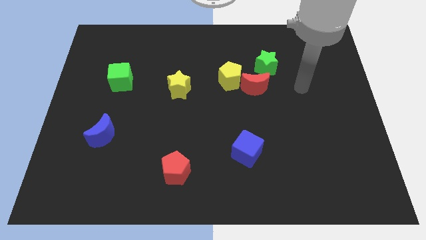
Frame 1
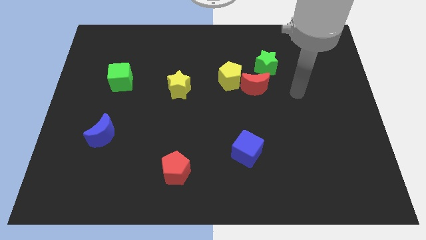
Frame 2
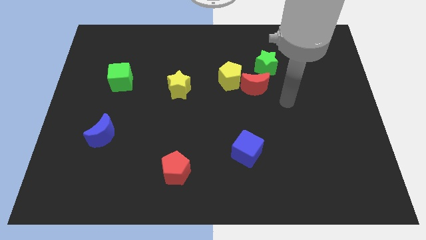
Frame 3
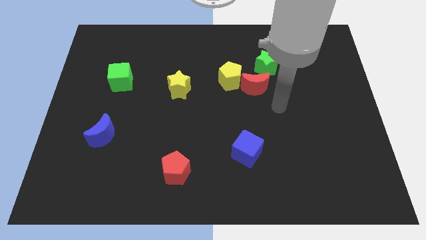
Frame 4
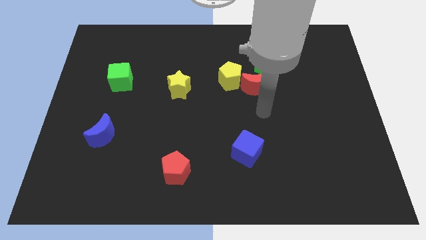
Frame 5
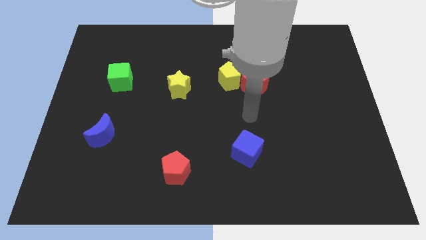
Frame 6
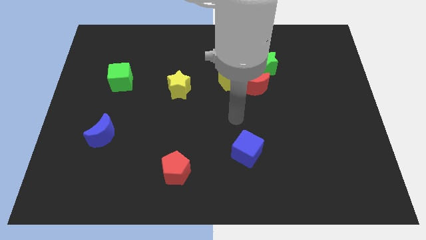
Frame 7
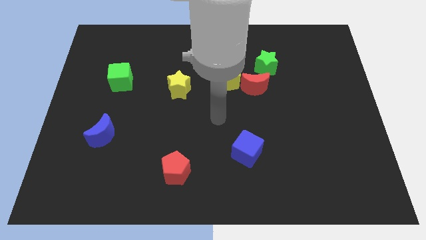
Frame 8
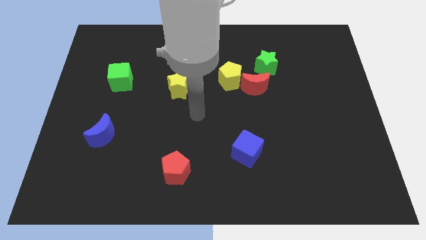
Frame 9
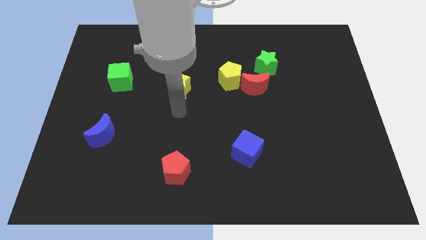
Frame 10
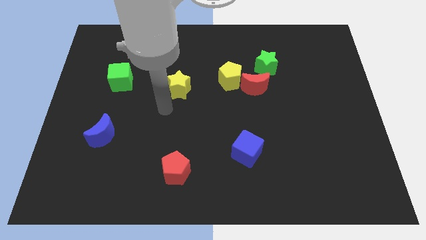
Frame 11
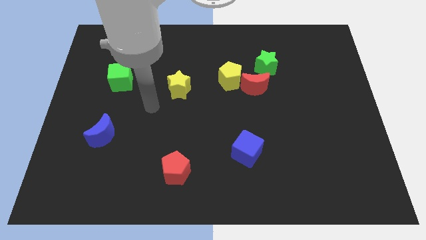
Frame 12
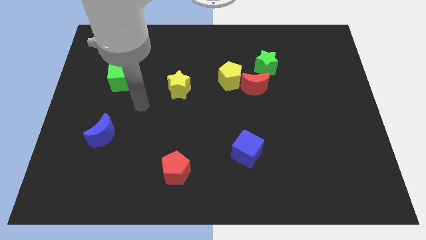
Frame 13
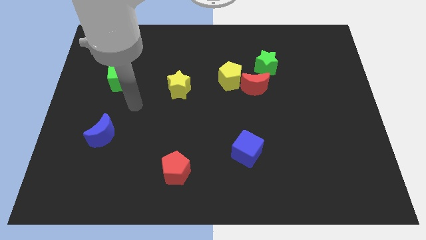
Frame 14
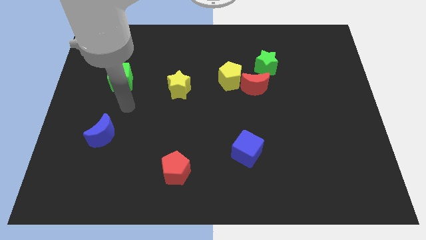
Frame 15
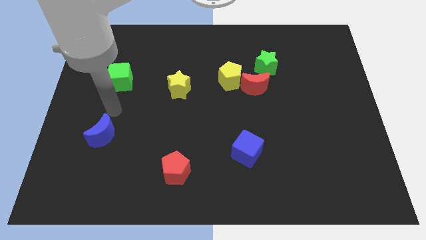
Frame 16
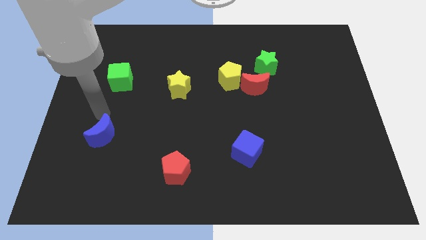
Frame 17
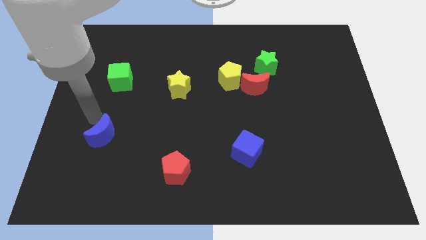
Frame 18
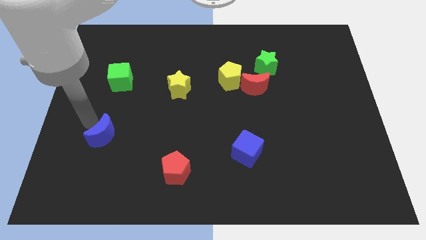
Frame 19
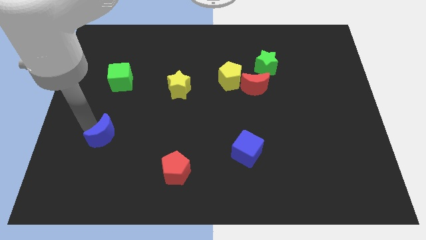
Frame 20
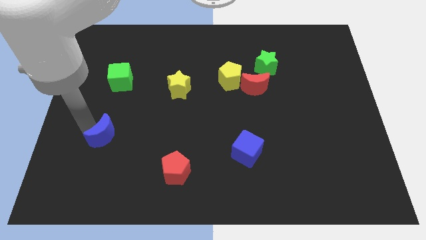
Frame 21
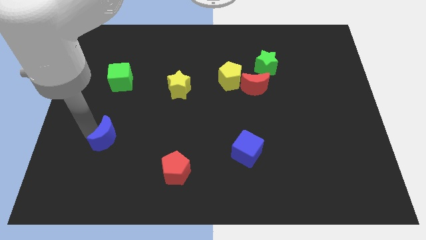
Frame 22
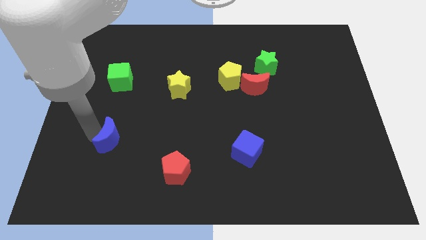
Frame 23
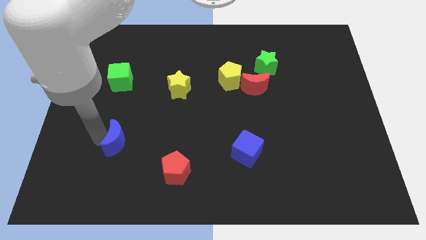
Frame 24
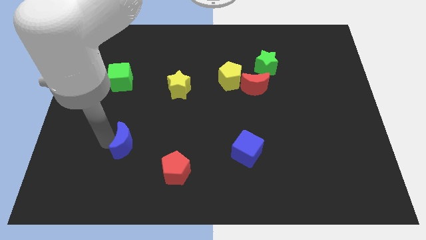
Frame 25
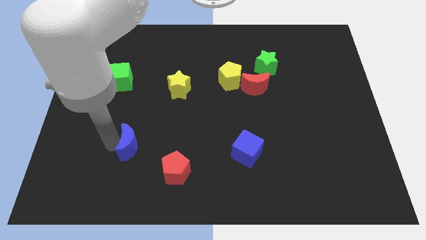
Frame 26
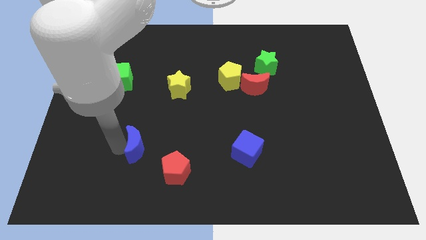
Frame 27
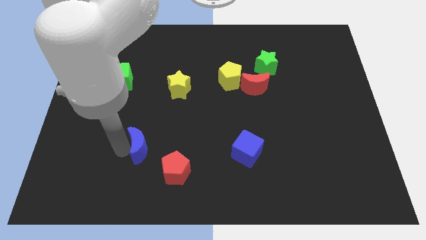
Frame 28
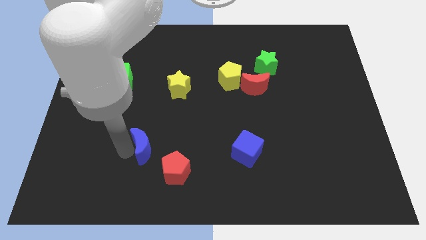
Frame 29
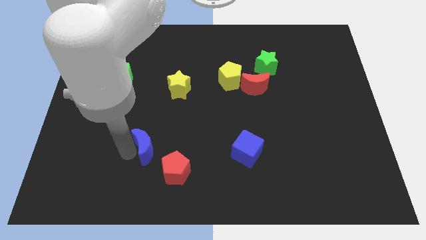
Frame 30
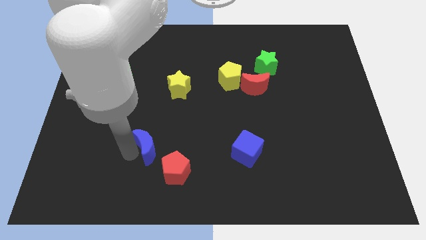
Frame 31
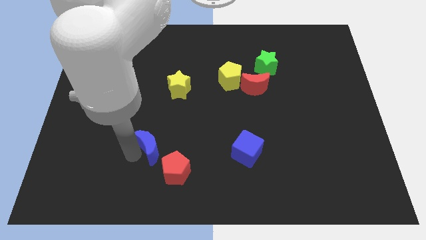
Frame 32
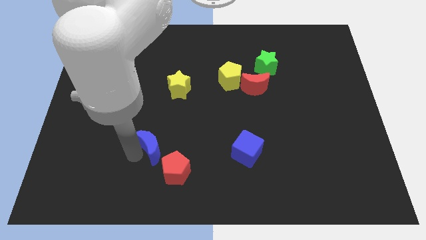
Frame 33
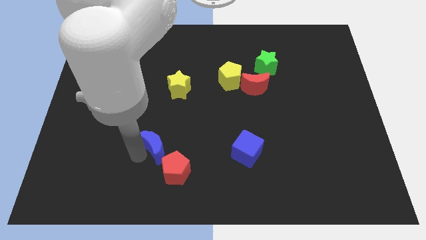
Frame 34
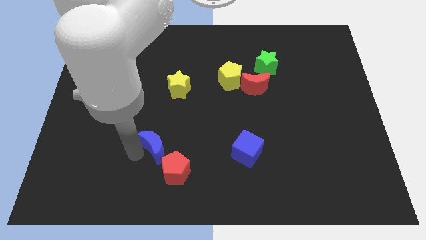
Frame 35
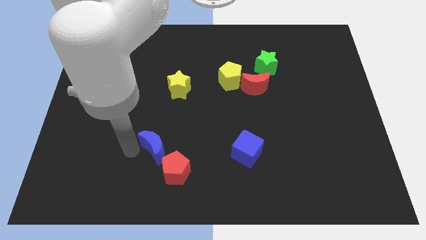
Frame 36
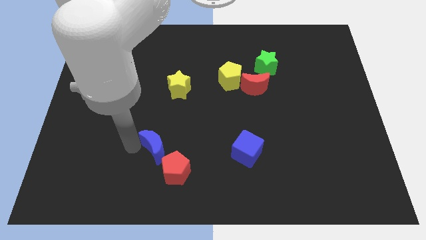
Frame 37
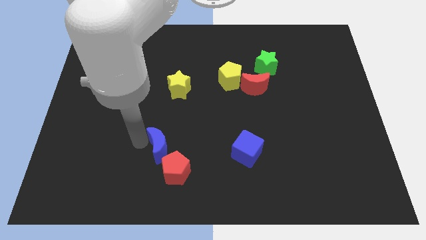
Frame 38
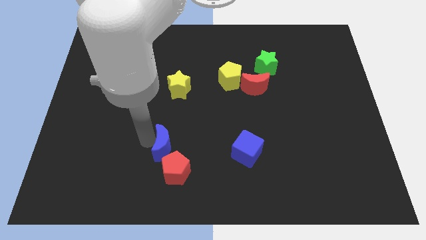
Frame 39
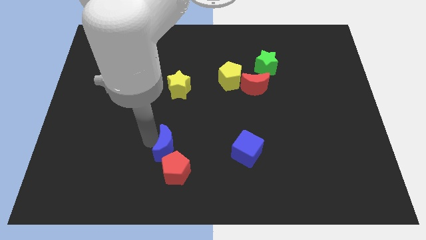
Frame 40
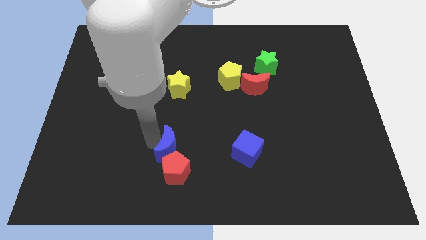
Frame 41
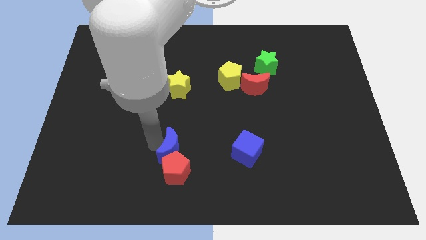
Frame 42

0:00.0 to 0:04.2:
slide the blue moon close to the red pentagon

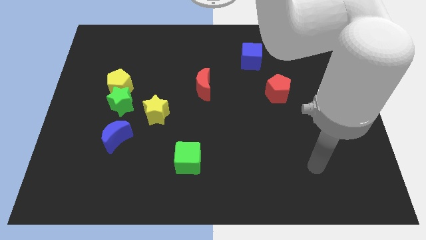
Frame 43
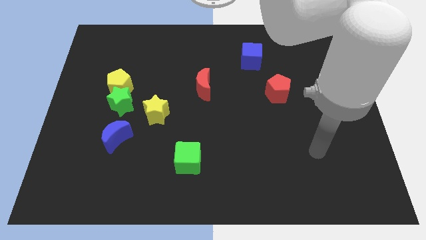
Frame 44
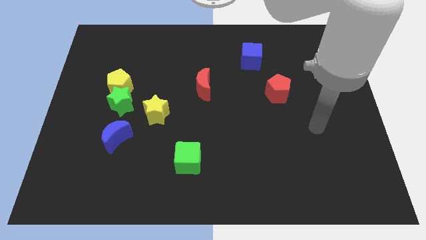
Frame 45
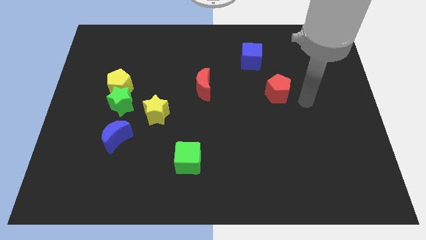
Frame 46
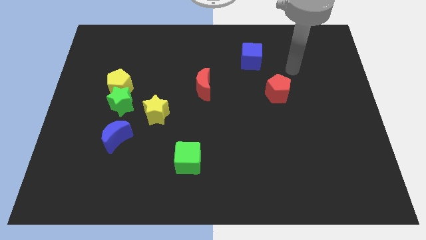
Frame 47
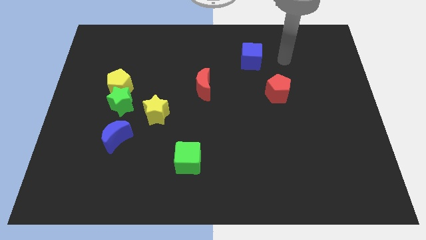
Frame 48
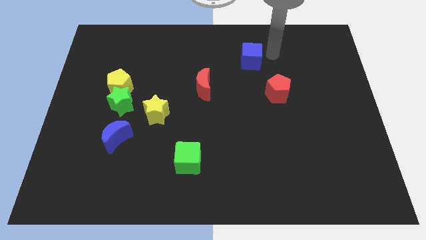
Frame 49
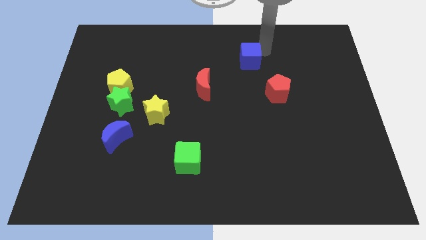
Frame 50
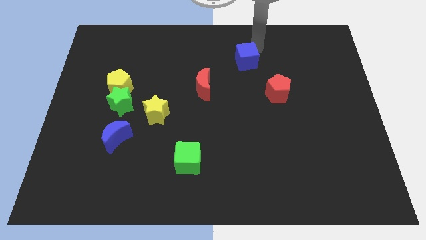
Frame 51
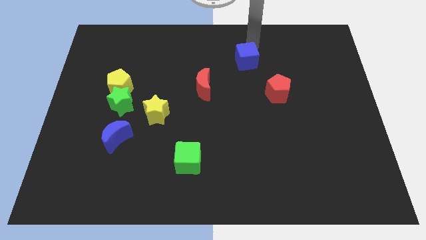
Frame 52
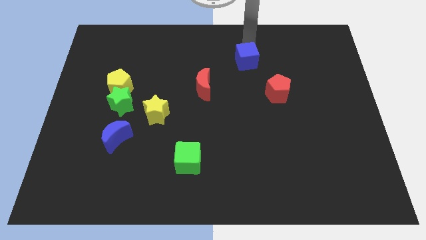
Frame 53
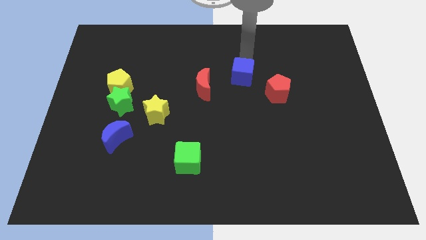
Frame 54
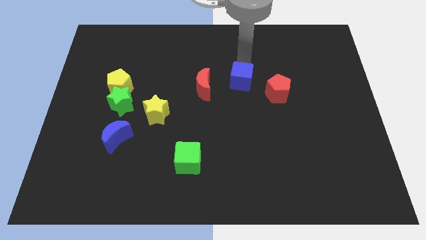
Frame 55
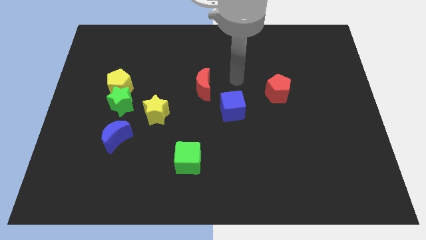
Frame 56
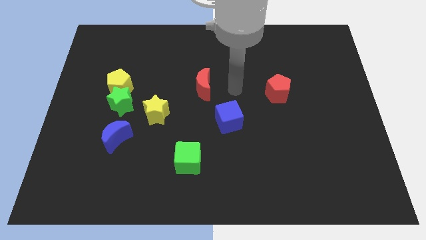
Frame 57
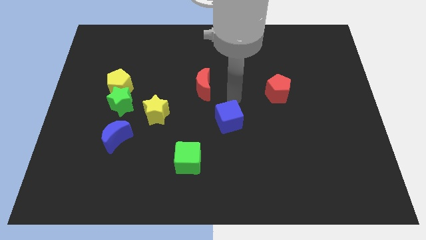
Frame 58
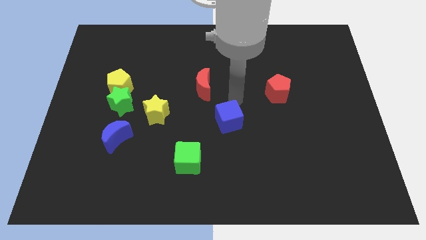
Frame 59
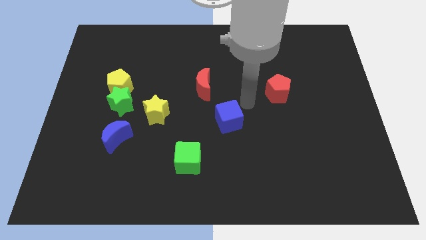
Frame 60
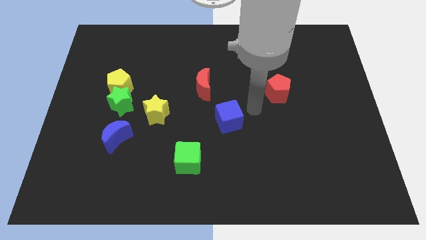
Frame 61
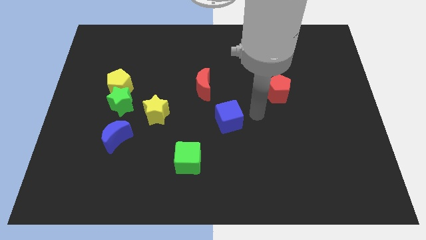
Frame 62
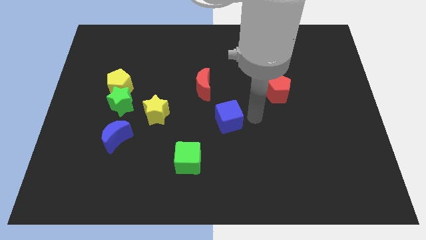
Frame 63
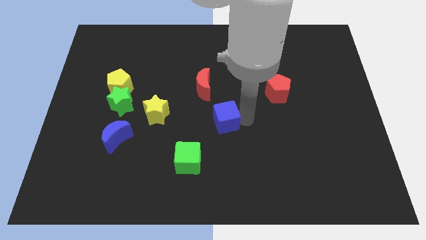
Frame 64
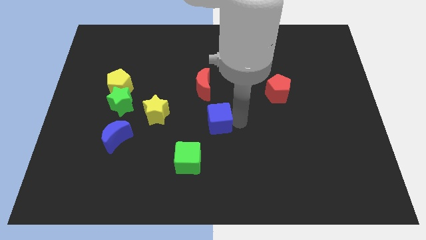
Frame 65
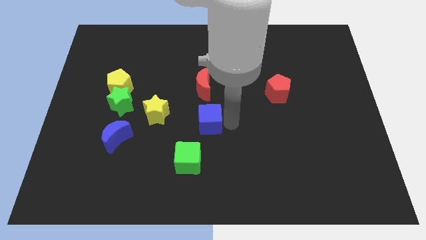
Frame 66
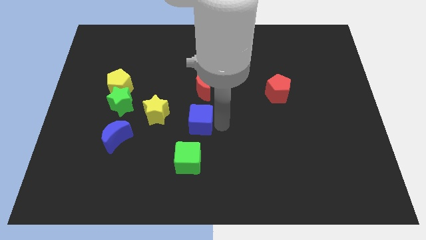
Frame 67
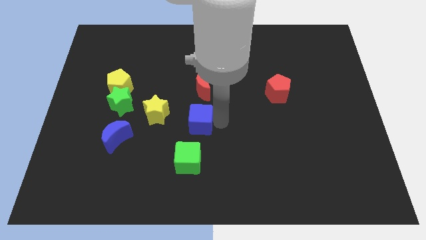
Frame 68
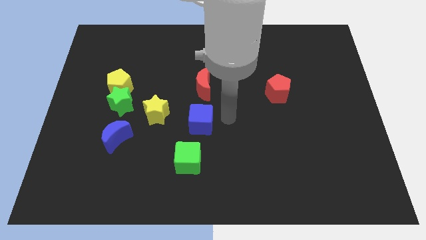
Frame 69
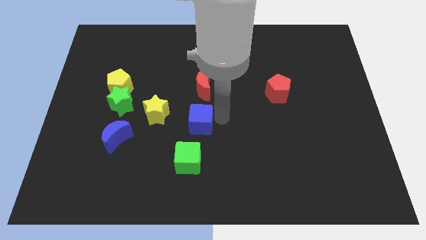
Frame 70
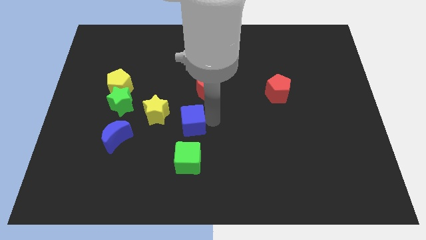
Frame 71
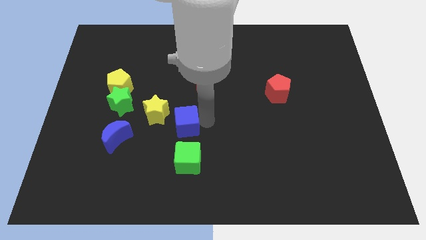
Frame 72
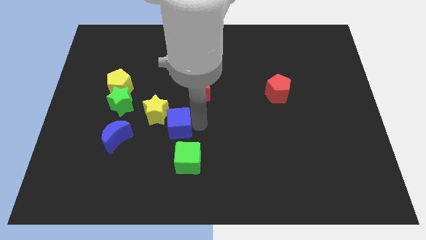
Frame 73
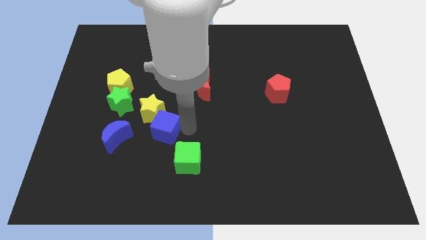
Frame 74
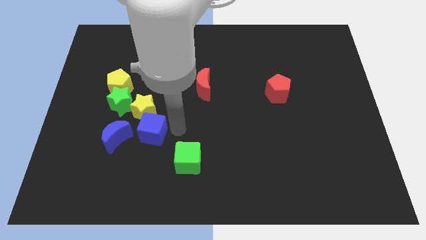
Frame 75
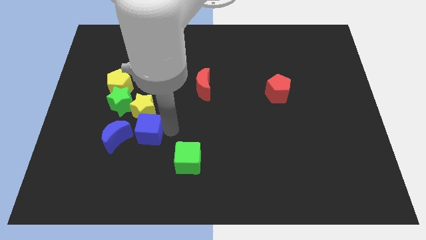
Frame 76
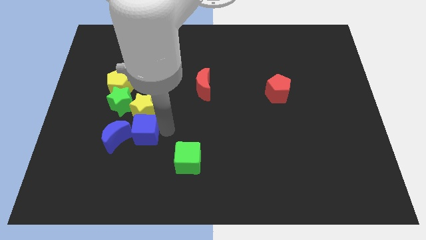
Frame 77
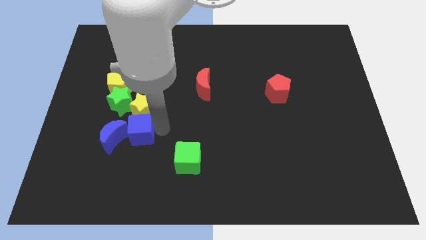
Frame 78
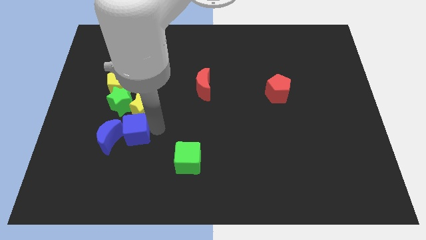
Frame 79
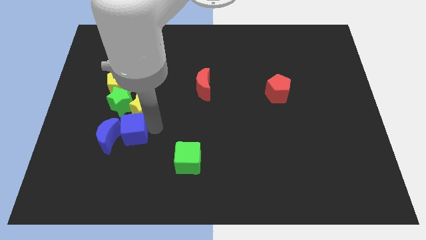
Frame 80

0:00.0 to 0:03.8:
move the blue cube towards the blue moon
